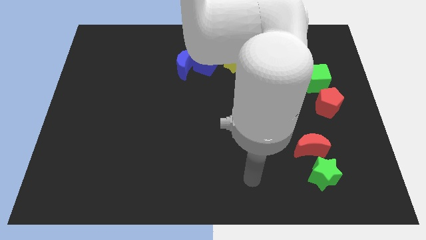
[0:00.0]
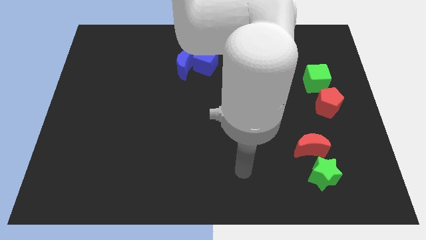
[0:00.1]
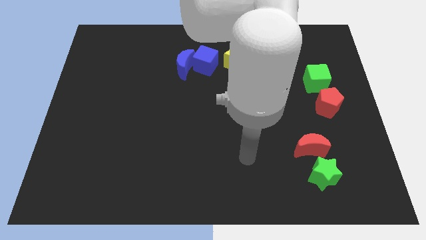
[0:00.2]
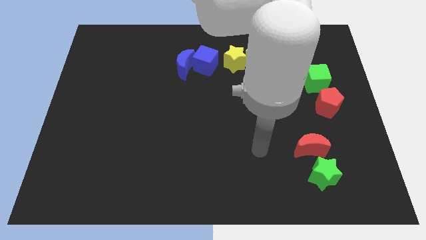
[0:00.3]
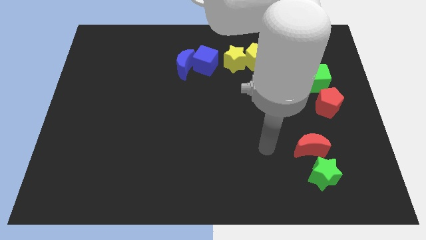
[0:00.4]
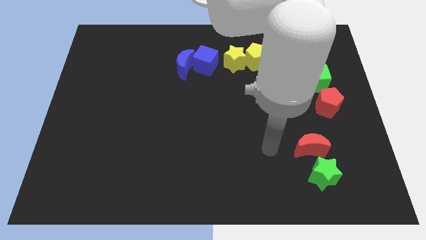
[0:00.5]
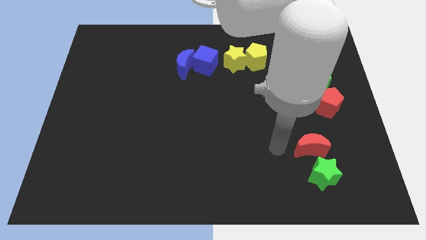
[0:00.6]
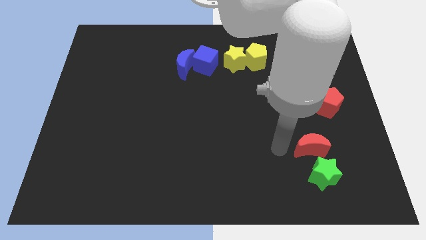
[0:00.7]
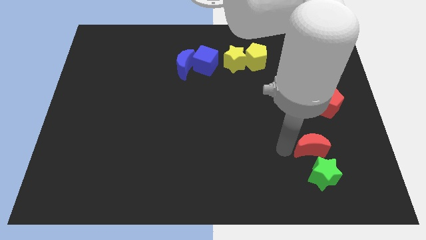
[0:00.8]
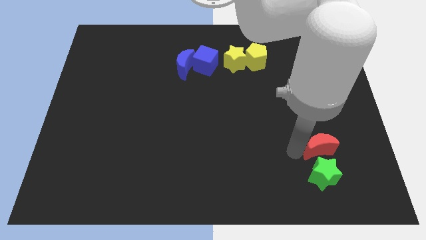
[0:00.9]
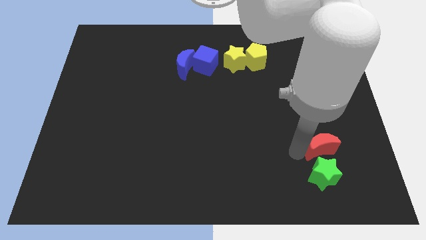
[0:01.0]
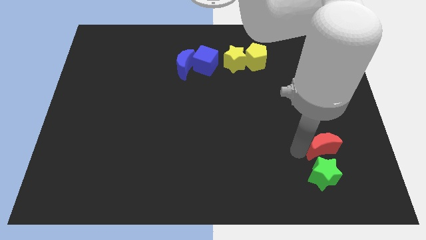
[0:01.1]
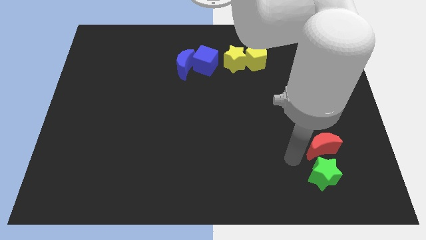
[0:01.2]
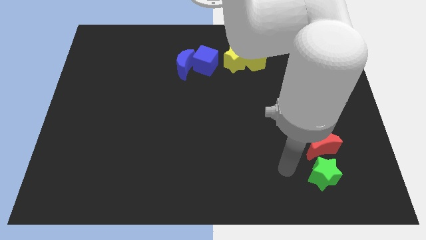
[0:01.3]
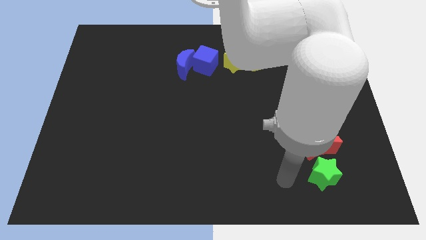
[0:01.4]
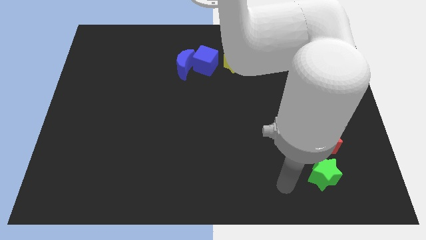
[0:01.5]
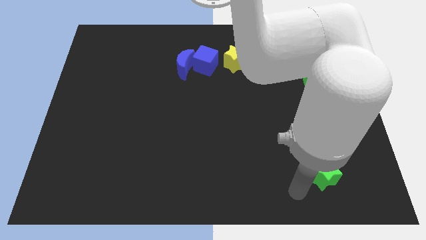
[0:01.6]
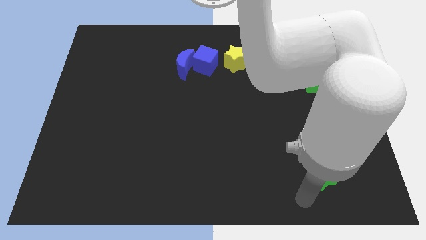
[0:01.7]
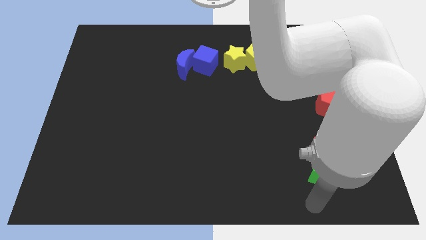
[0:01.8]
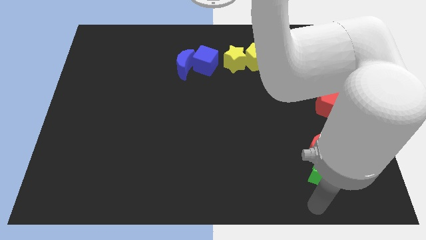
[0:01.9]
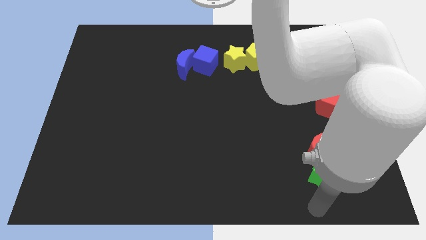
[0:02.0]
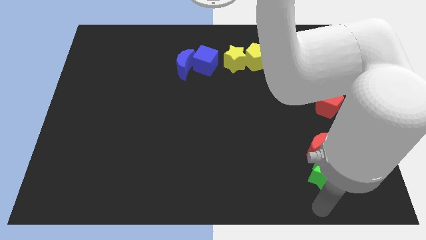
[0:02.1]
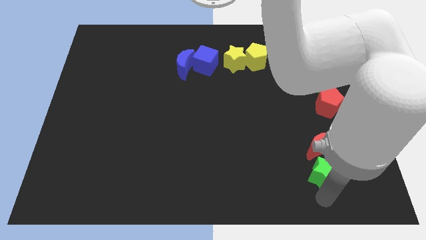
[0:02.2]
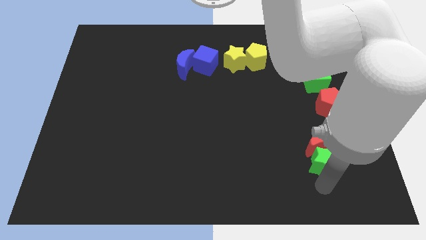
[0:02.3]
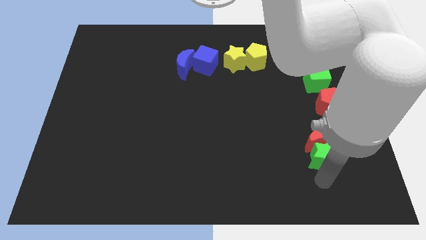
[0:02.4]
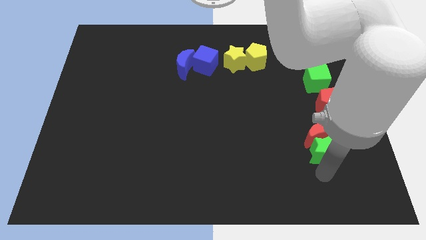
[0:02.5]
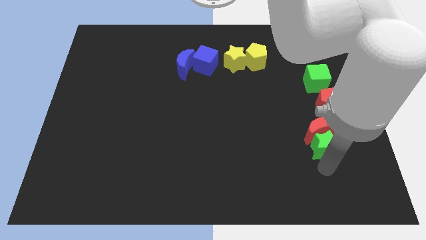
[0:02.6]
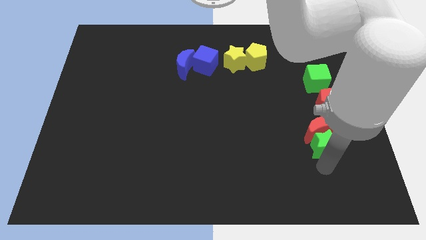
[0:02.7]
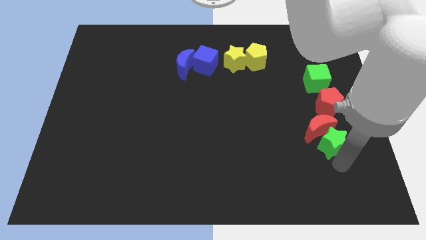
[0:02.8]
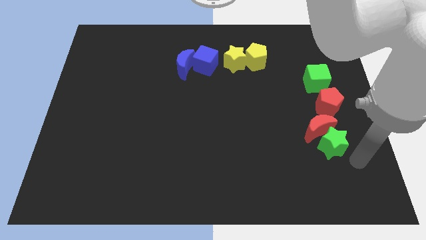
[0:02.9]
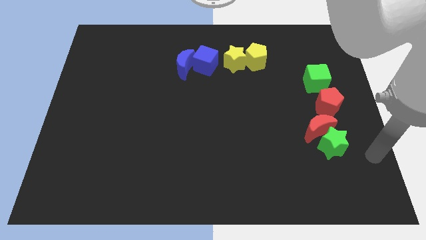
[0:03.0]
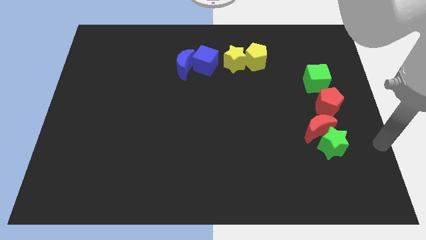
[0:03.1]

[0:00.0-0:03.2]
push the red moon and green star towards the red pentagon

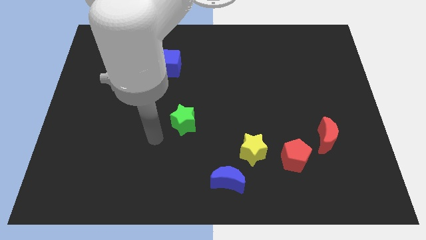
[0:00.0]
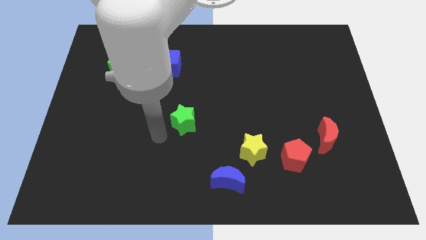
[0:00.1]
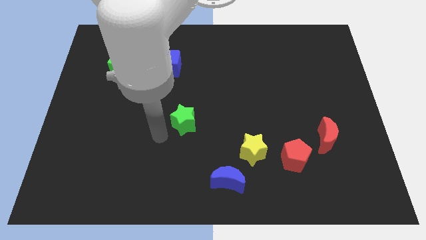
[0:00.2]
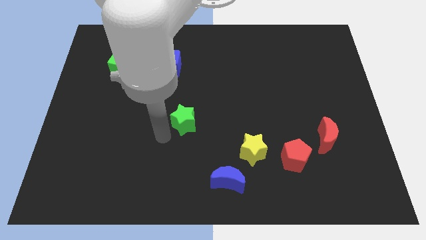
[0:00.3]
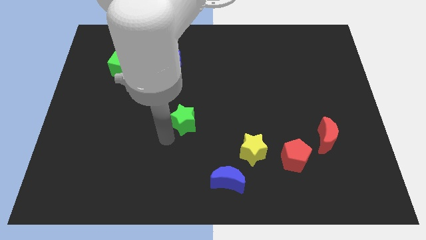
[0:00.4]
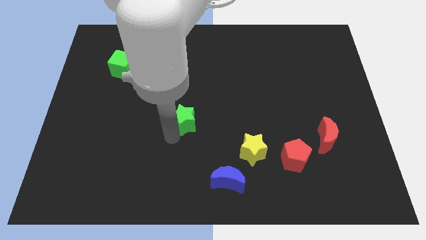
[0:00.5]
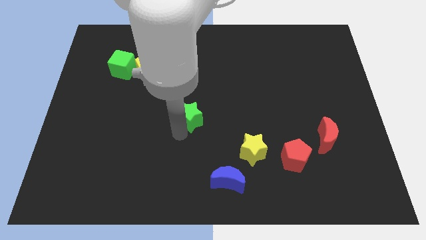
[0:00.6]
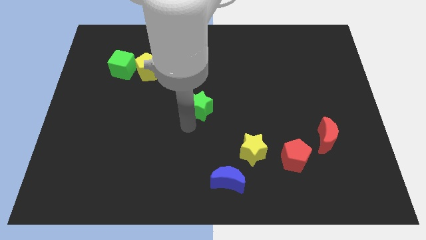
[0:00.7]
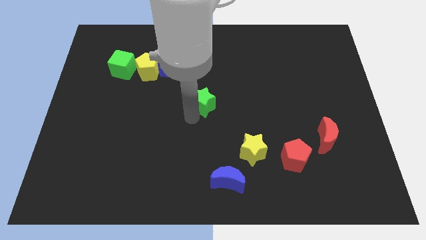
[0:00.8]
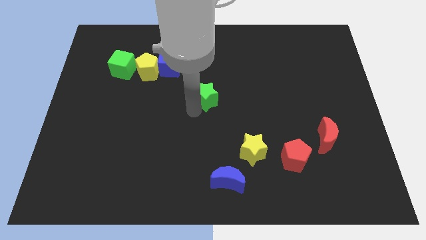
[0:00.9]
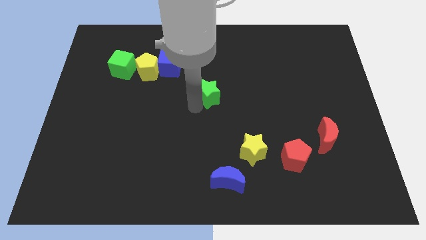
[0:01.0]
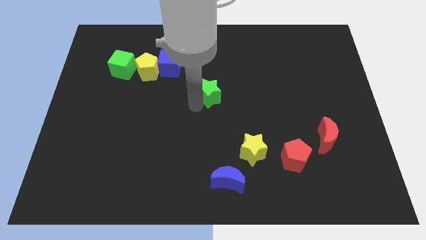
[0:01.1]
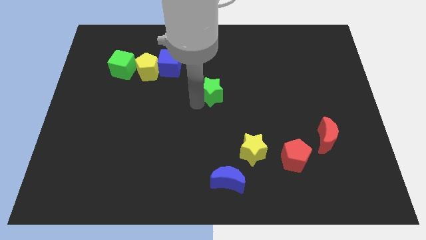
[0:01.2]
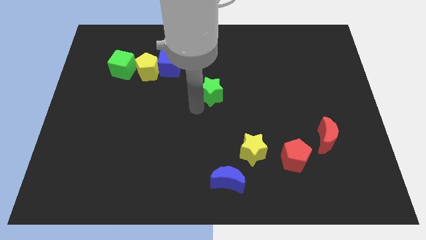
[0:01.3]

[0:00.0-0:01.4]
move the green star diagonally top left to the yellow star

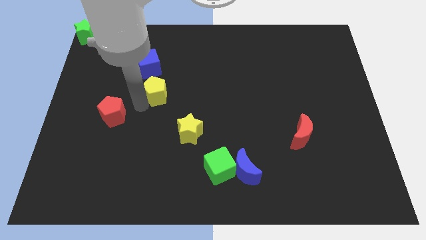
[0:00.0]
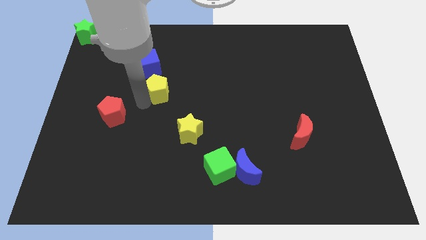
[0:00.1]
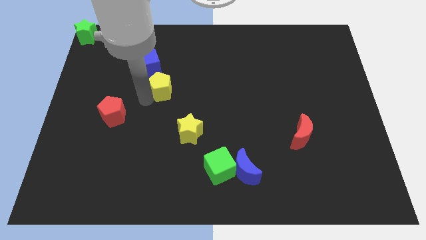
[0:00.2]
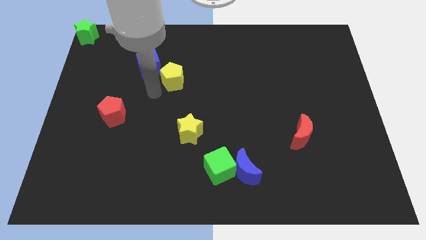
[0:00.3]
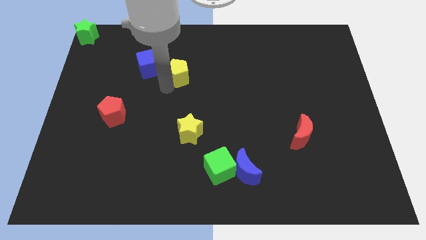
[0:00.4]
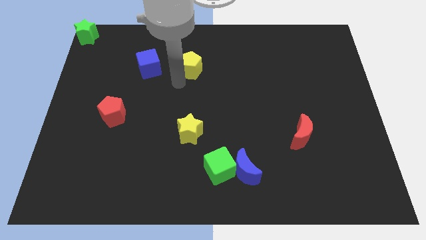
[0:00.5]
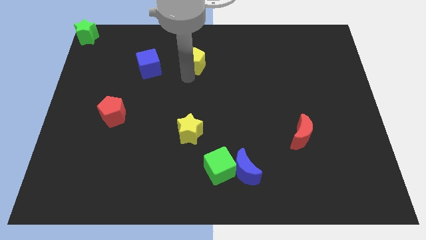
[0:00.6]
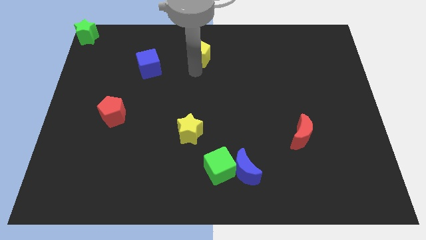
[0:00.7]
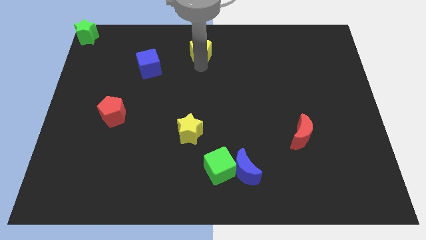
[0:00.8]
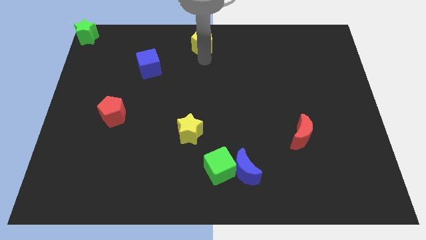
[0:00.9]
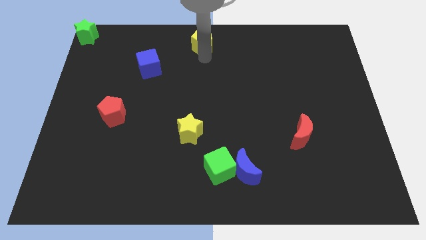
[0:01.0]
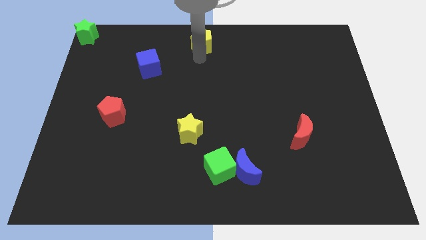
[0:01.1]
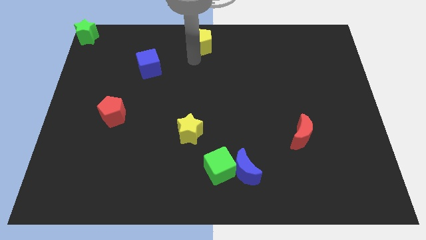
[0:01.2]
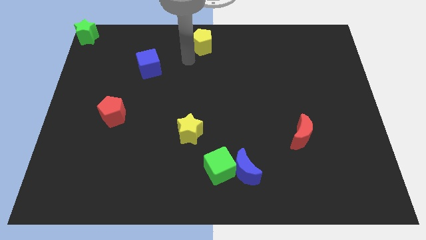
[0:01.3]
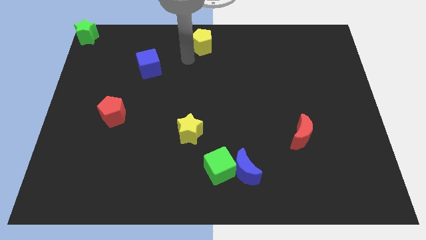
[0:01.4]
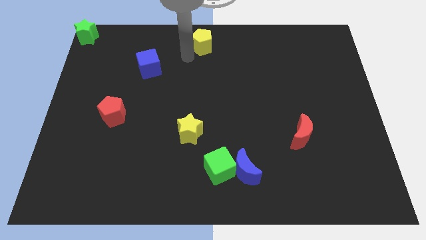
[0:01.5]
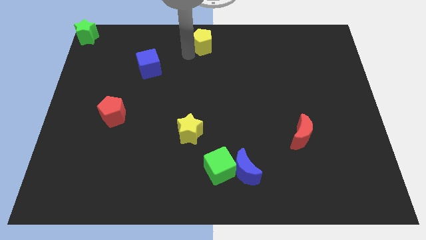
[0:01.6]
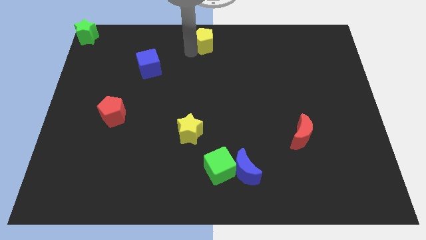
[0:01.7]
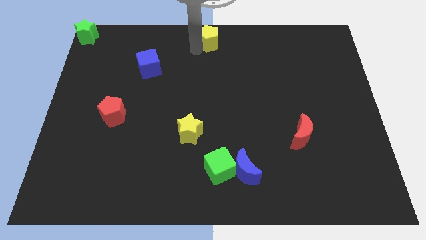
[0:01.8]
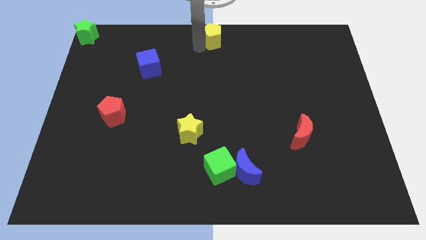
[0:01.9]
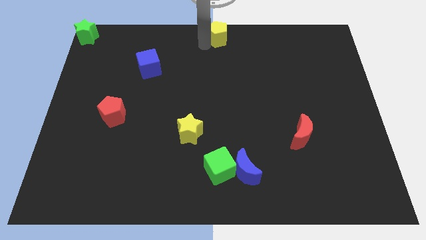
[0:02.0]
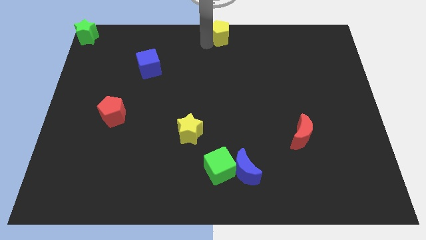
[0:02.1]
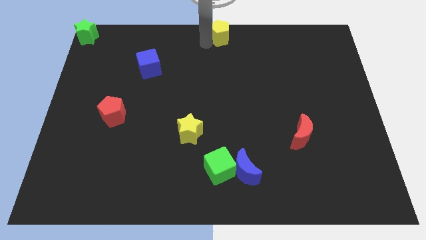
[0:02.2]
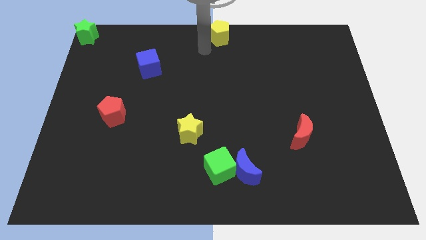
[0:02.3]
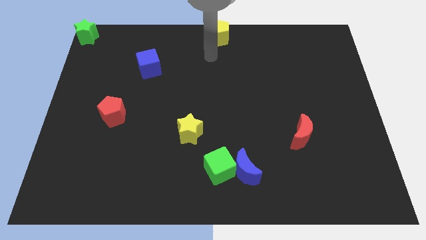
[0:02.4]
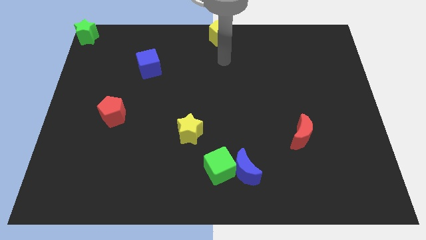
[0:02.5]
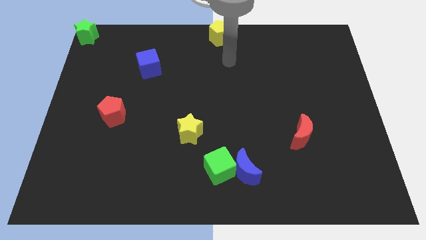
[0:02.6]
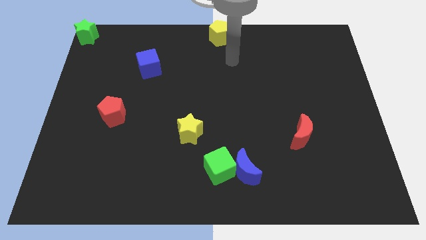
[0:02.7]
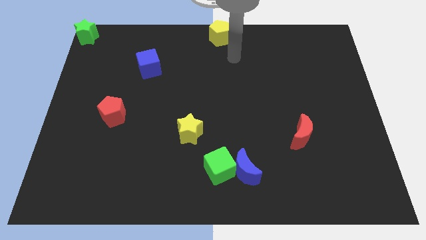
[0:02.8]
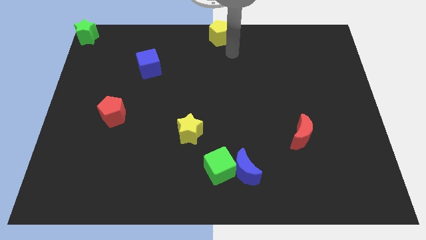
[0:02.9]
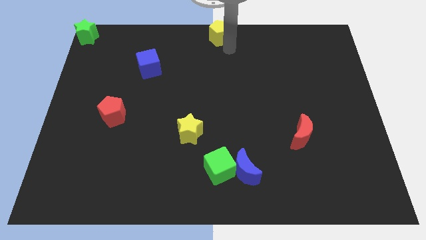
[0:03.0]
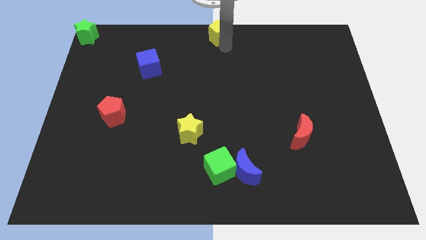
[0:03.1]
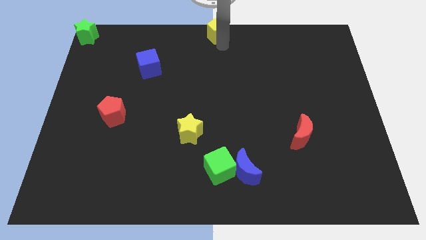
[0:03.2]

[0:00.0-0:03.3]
place the yellow pentagon at the top center of the board

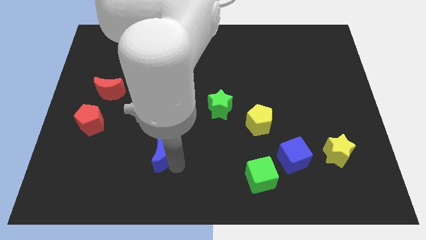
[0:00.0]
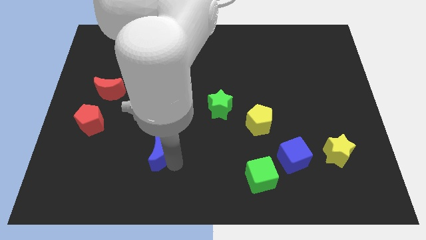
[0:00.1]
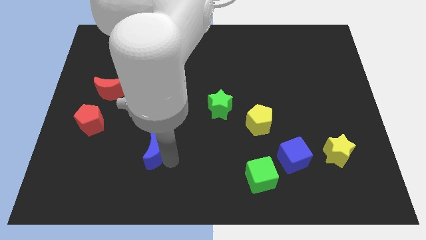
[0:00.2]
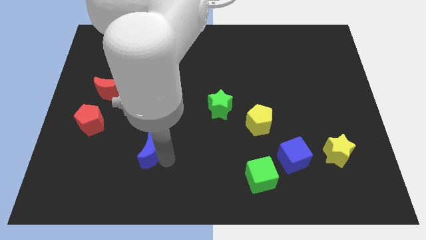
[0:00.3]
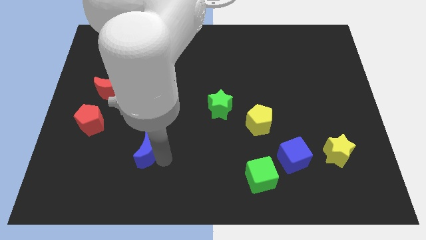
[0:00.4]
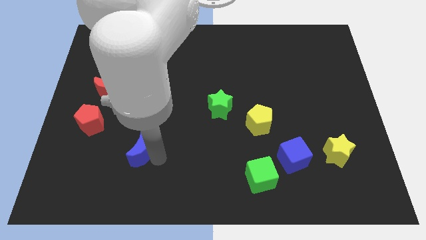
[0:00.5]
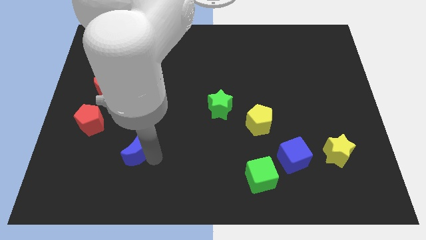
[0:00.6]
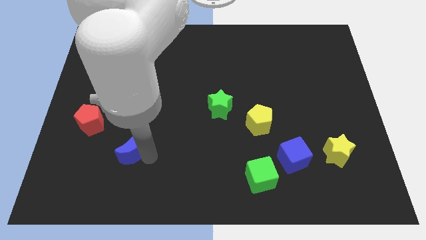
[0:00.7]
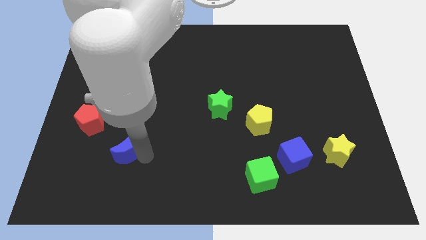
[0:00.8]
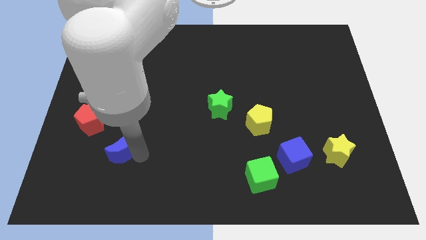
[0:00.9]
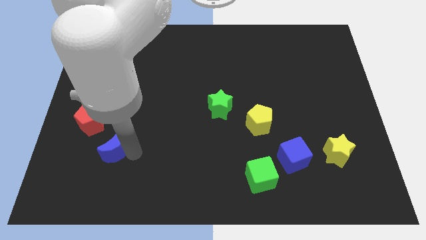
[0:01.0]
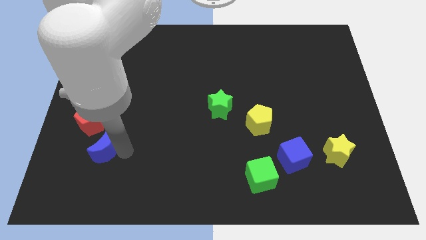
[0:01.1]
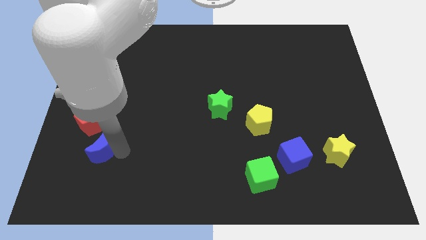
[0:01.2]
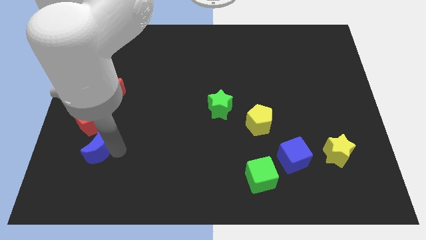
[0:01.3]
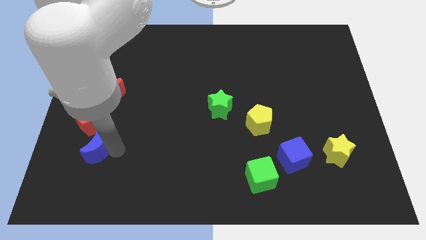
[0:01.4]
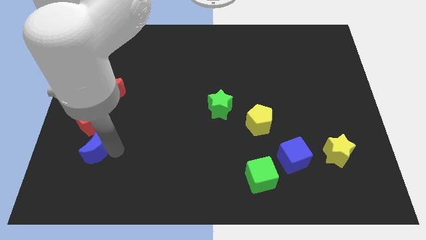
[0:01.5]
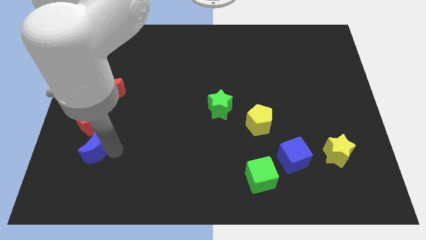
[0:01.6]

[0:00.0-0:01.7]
push the blue crescent close to the red pentagon
